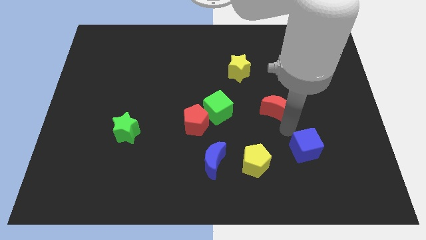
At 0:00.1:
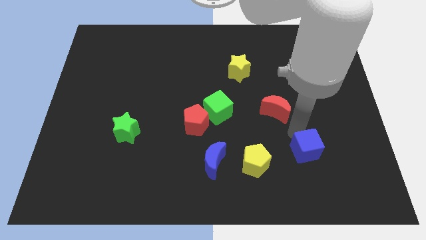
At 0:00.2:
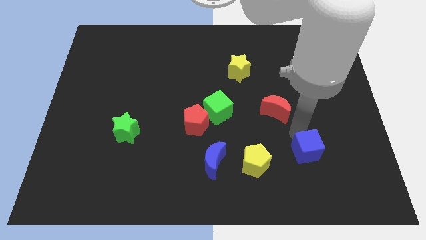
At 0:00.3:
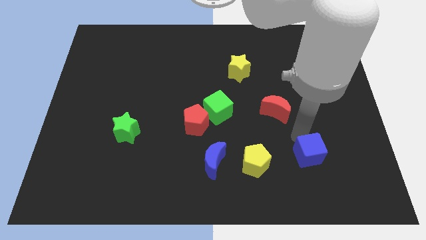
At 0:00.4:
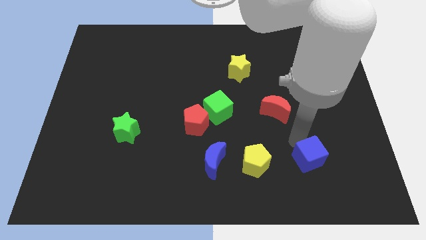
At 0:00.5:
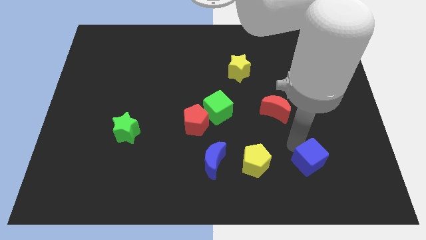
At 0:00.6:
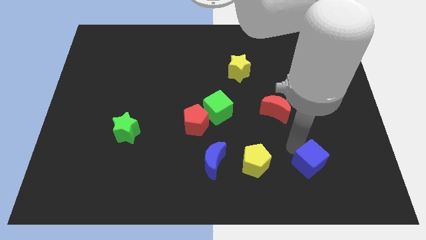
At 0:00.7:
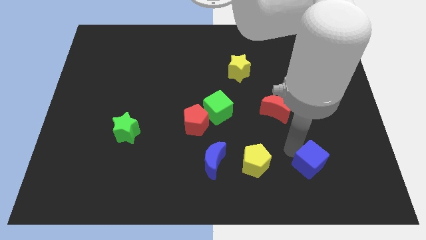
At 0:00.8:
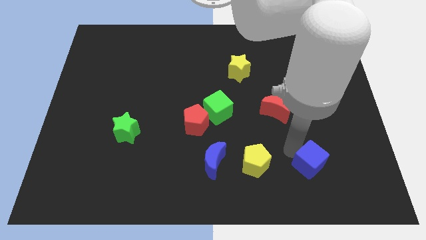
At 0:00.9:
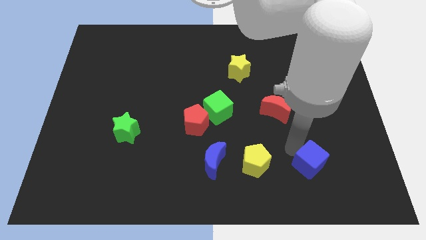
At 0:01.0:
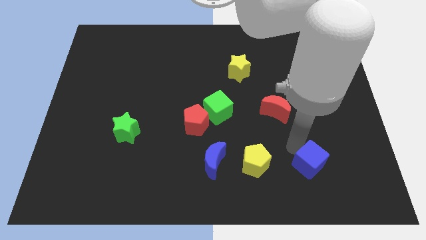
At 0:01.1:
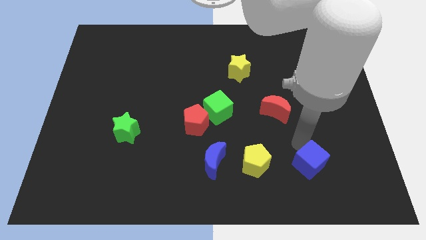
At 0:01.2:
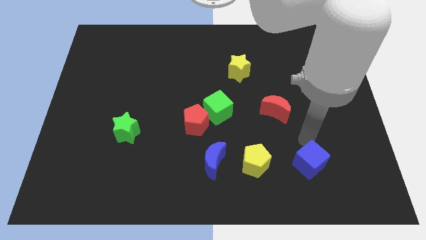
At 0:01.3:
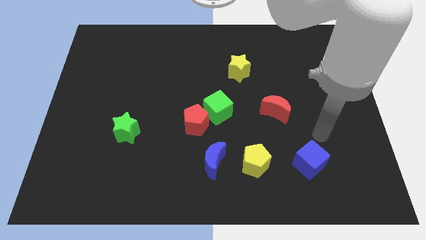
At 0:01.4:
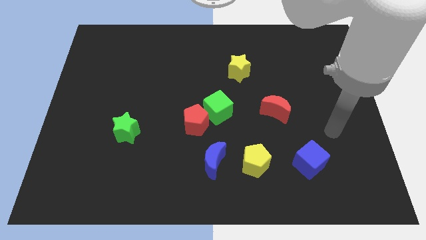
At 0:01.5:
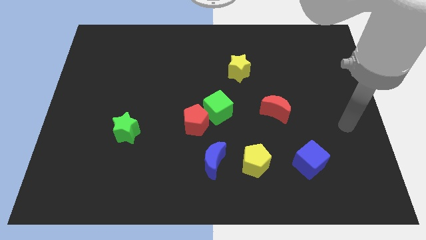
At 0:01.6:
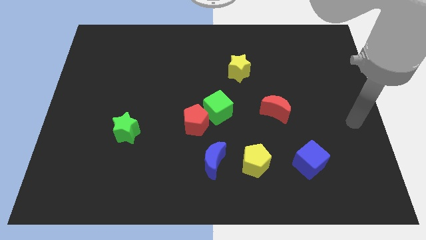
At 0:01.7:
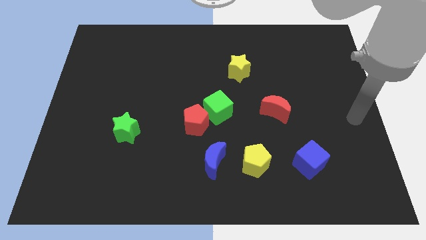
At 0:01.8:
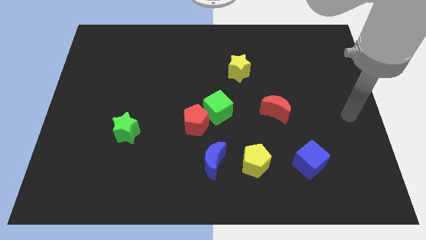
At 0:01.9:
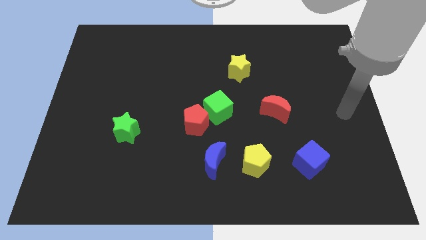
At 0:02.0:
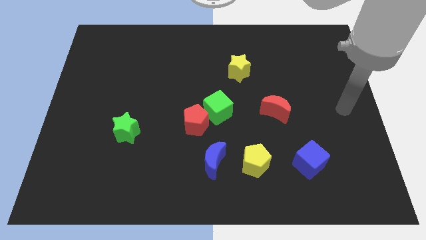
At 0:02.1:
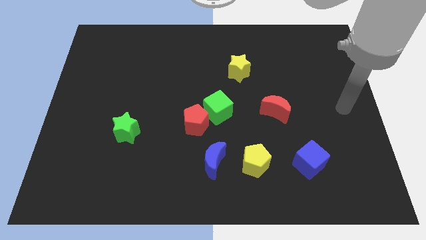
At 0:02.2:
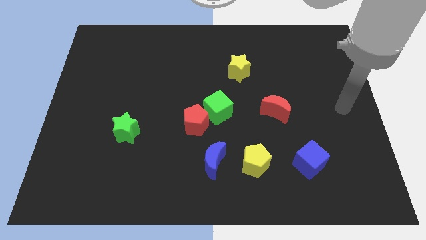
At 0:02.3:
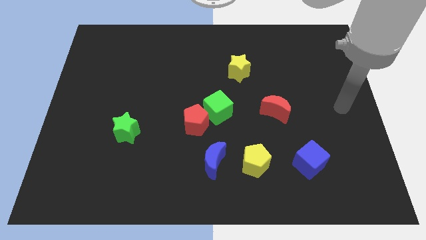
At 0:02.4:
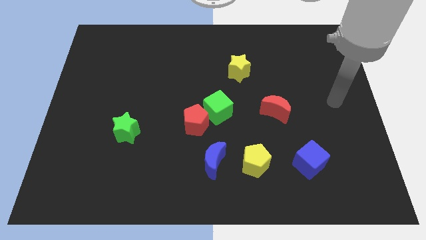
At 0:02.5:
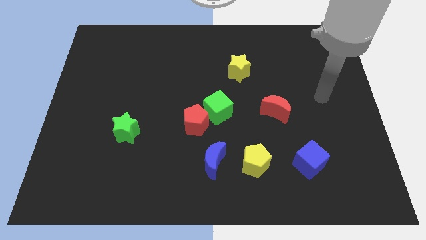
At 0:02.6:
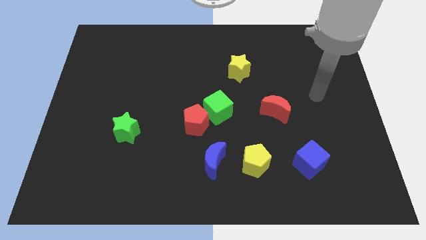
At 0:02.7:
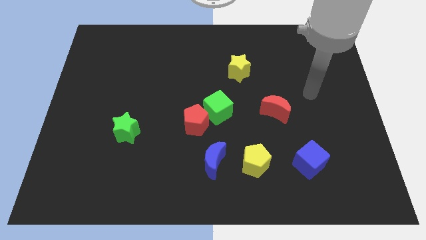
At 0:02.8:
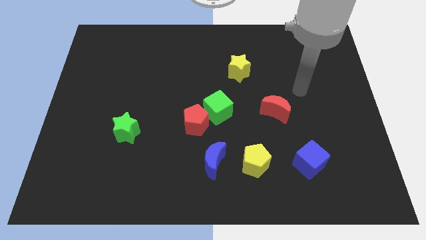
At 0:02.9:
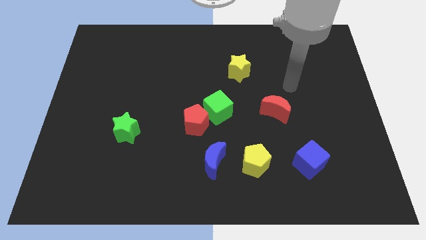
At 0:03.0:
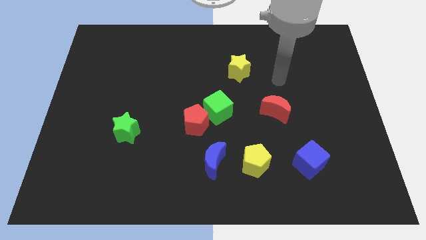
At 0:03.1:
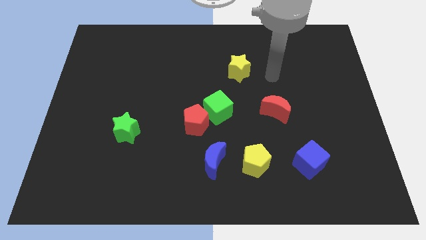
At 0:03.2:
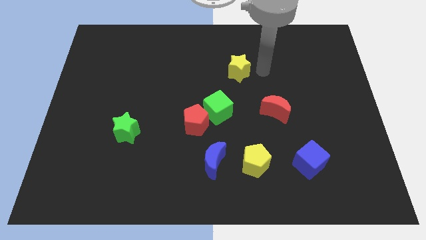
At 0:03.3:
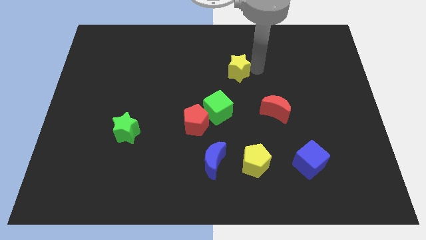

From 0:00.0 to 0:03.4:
adjust the blue cube at the right side of the horizontal line of blocks

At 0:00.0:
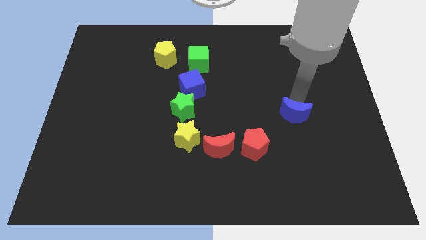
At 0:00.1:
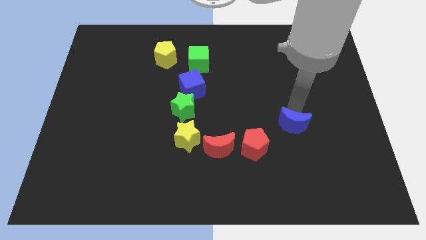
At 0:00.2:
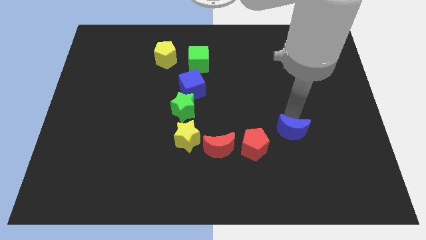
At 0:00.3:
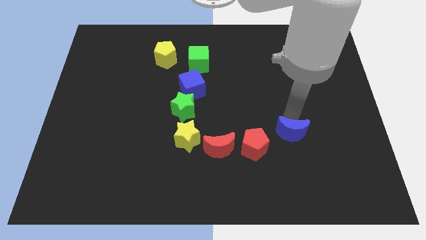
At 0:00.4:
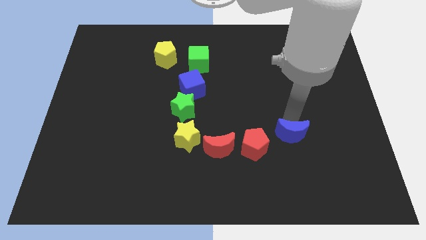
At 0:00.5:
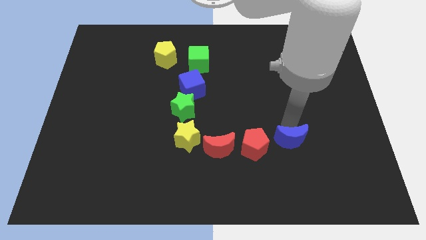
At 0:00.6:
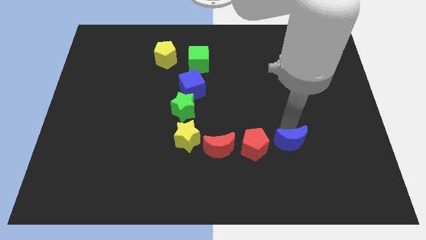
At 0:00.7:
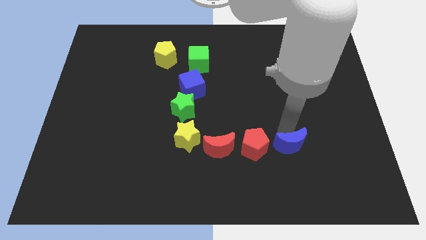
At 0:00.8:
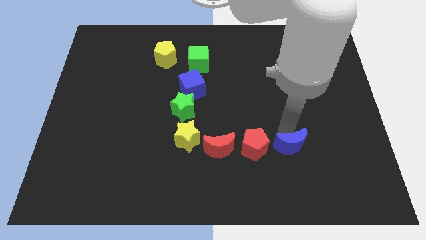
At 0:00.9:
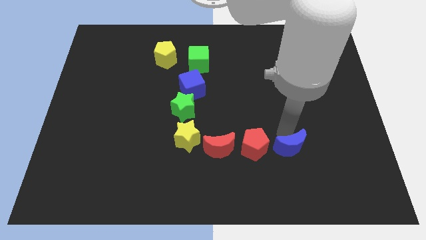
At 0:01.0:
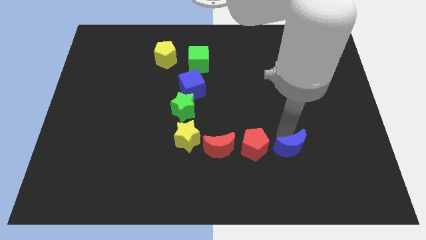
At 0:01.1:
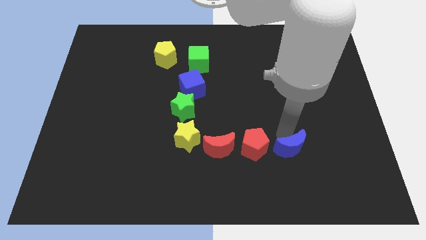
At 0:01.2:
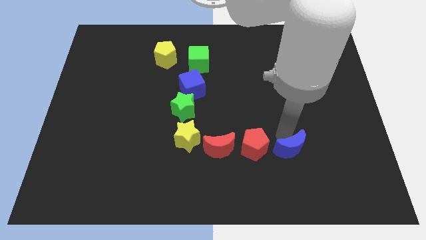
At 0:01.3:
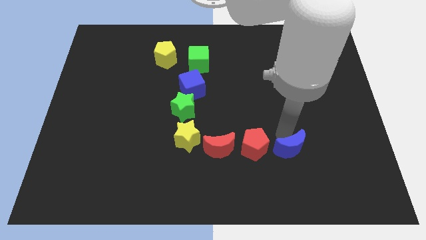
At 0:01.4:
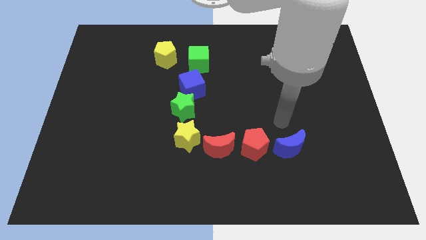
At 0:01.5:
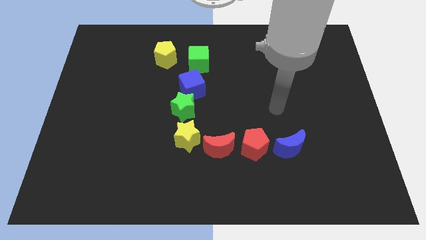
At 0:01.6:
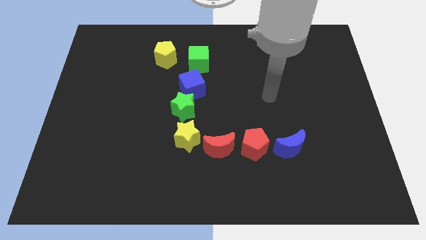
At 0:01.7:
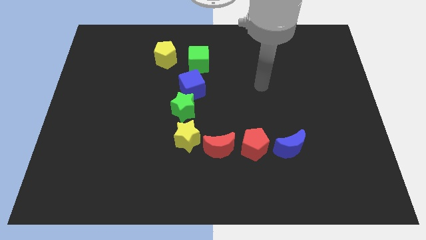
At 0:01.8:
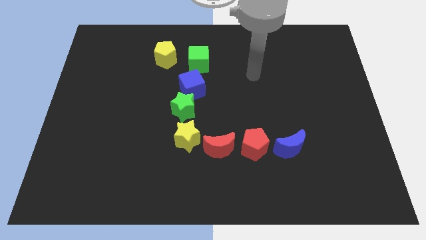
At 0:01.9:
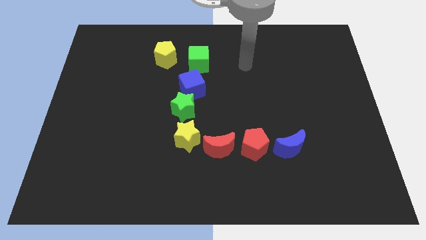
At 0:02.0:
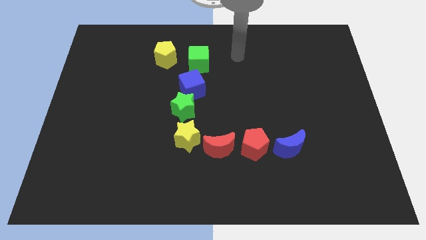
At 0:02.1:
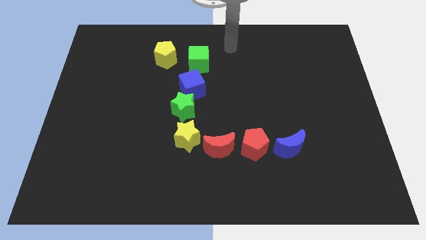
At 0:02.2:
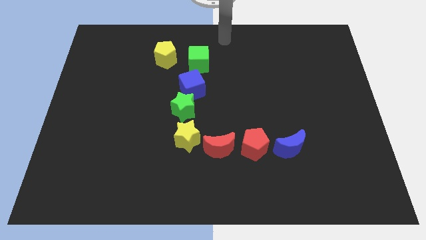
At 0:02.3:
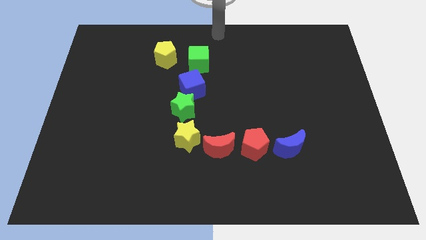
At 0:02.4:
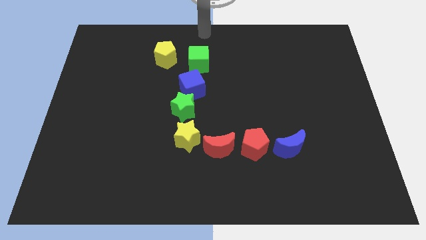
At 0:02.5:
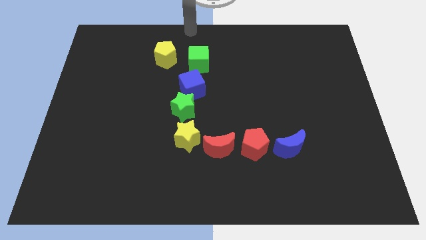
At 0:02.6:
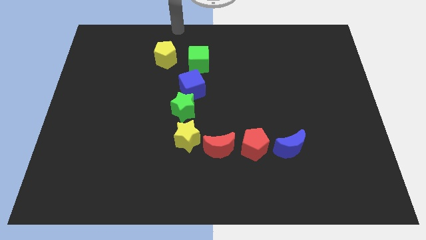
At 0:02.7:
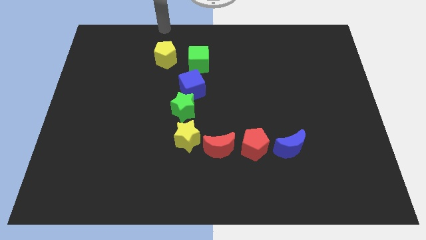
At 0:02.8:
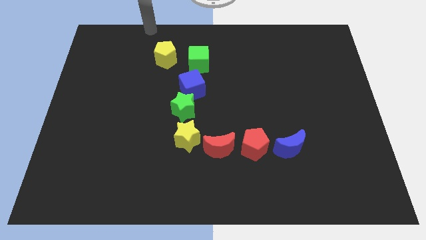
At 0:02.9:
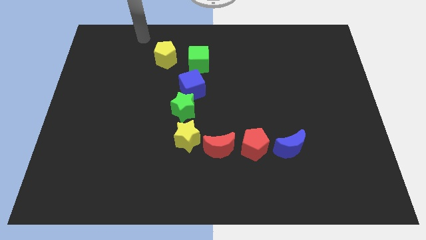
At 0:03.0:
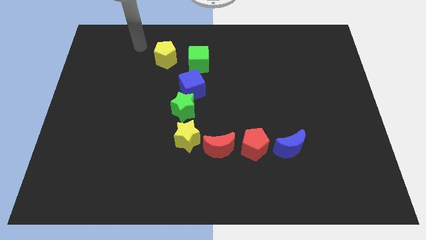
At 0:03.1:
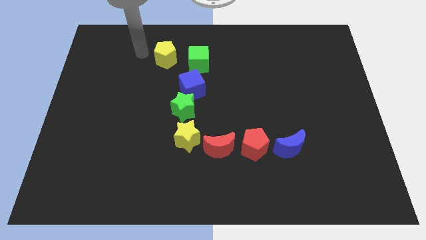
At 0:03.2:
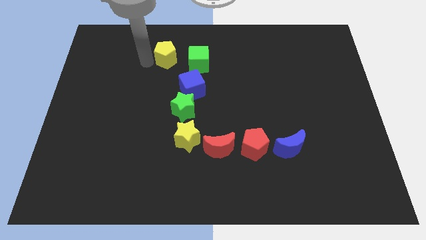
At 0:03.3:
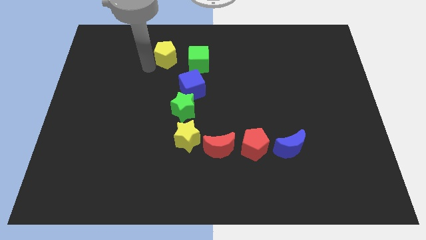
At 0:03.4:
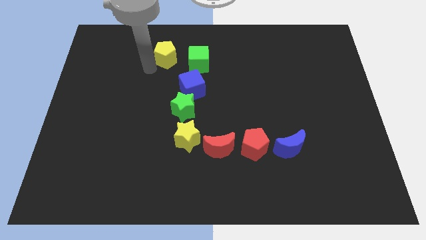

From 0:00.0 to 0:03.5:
place the arm to the left of the yellow pentagon

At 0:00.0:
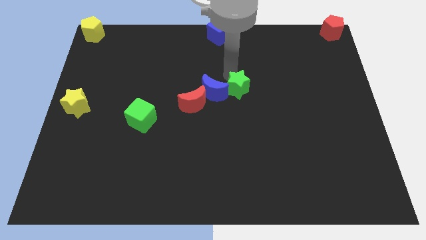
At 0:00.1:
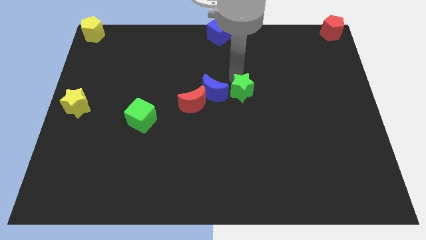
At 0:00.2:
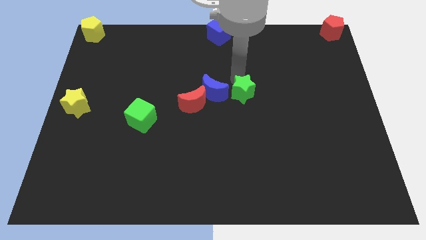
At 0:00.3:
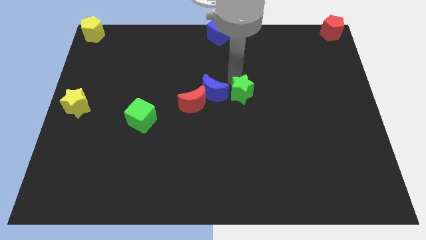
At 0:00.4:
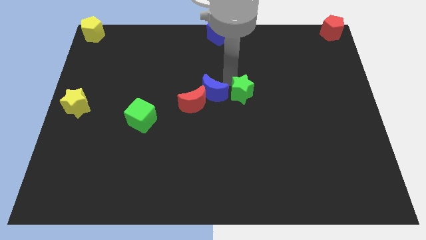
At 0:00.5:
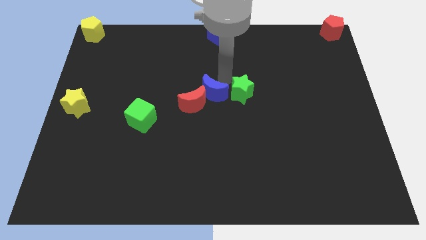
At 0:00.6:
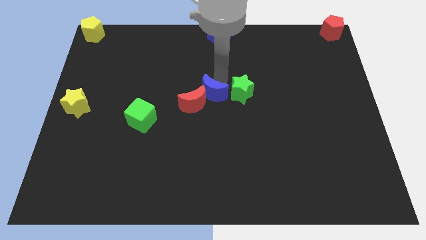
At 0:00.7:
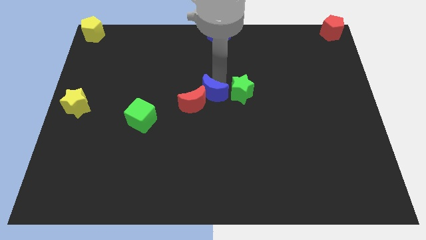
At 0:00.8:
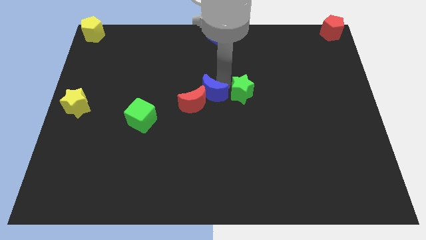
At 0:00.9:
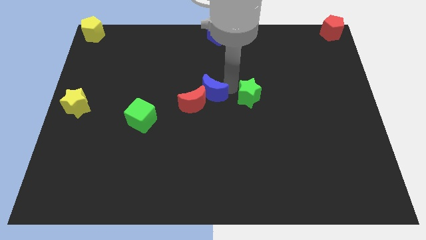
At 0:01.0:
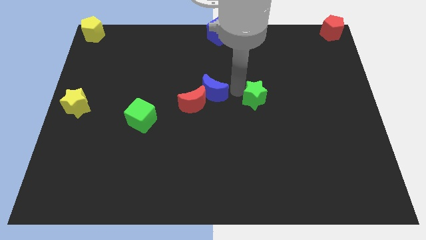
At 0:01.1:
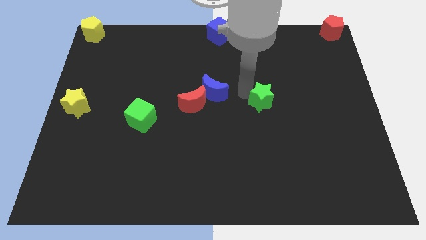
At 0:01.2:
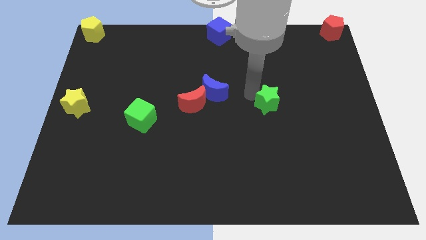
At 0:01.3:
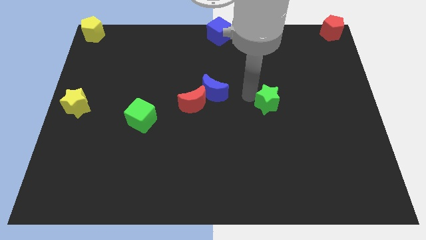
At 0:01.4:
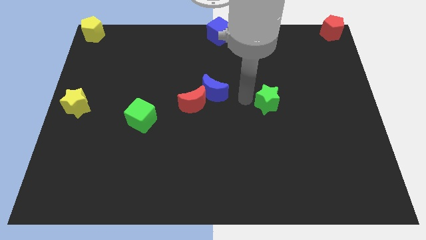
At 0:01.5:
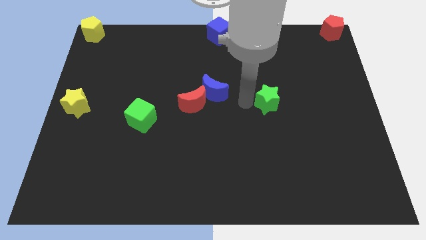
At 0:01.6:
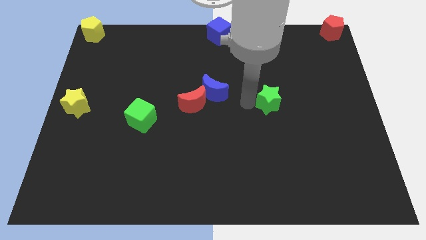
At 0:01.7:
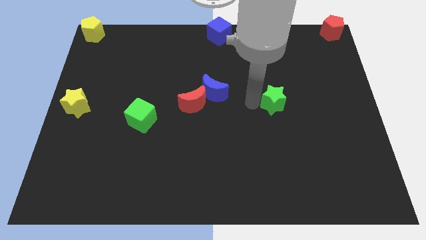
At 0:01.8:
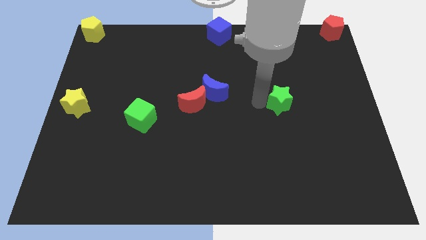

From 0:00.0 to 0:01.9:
take away the green star from the blue crescent towards the right

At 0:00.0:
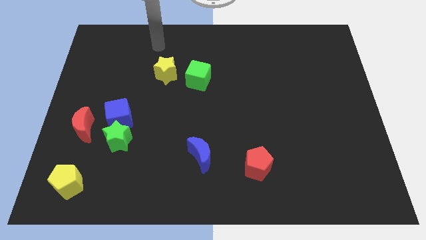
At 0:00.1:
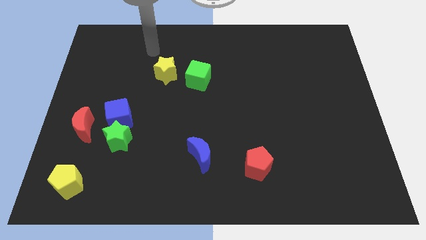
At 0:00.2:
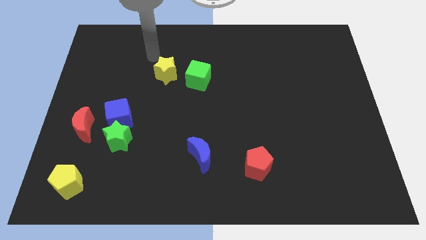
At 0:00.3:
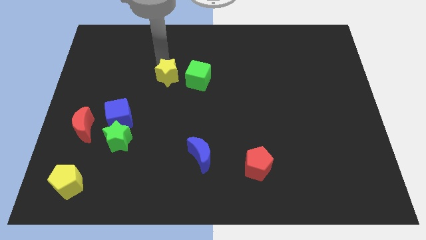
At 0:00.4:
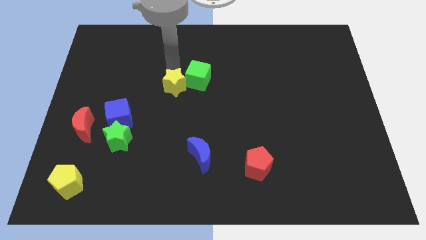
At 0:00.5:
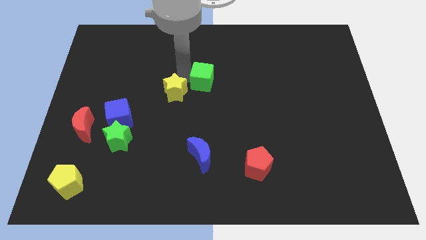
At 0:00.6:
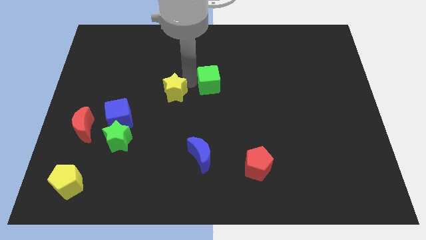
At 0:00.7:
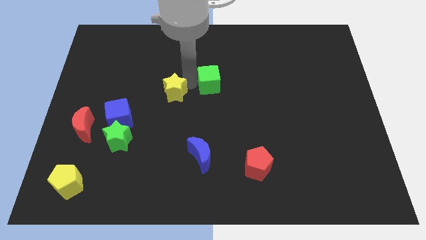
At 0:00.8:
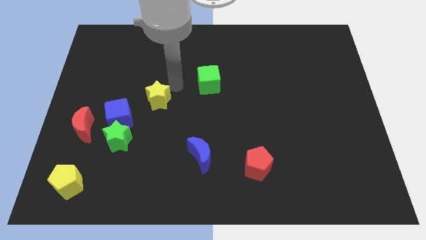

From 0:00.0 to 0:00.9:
move the yellow star along with the green cube
